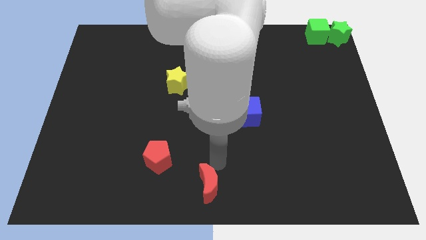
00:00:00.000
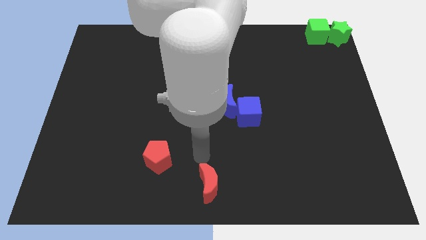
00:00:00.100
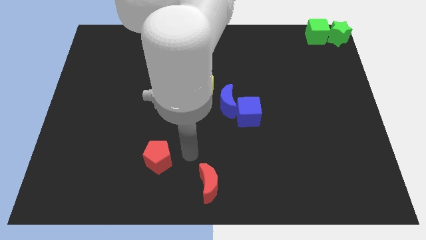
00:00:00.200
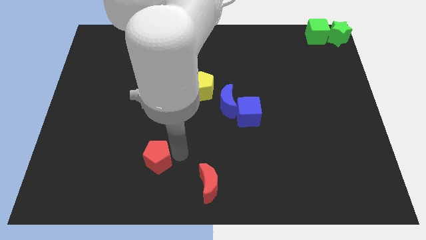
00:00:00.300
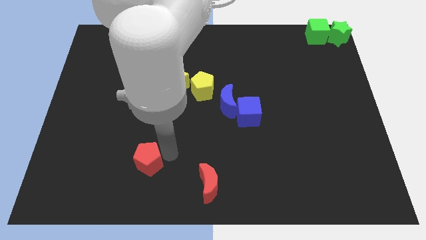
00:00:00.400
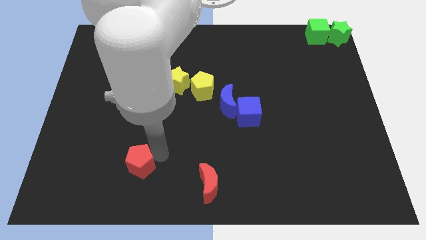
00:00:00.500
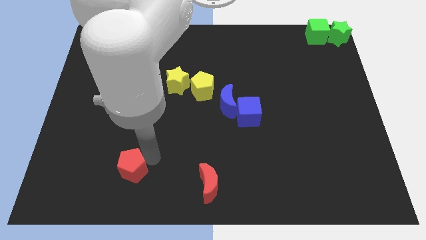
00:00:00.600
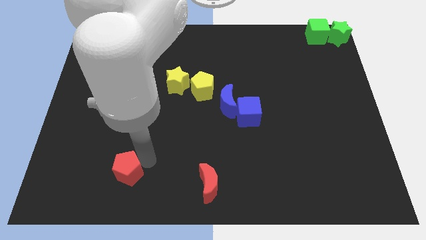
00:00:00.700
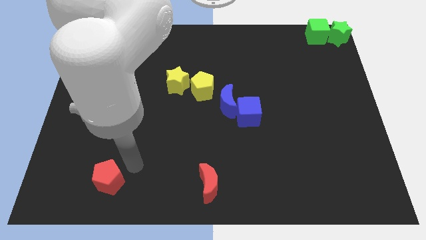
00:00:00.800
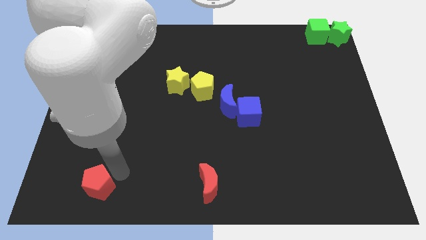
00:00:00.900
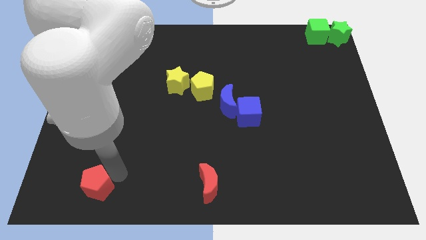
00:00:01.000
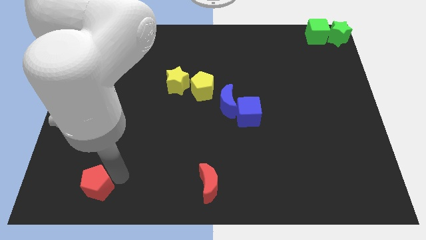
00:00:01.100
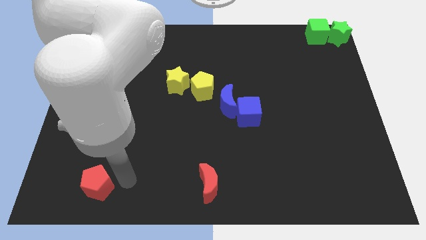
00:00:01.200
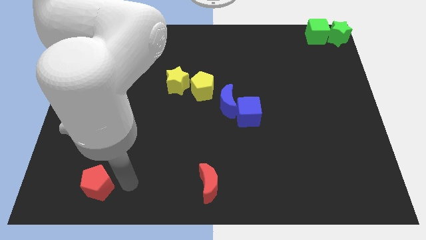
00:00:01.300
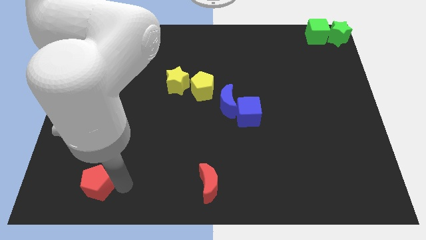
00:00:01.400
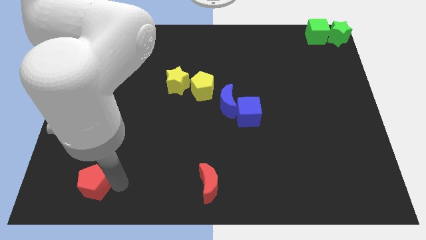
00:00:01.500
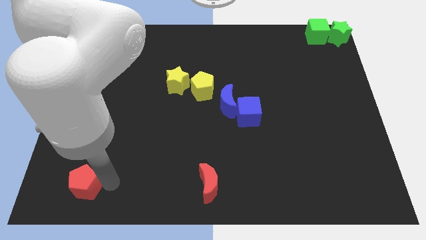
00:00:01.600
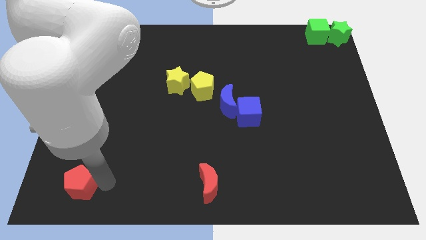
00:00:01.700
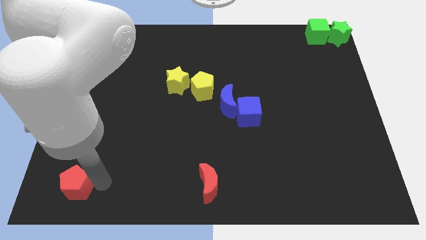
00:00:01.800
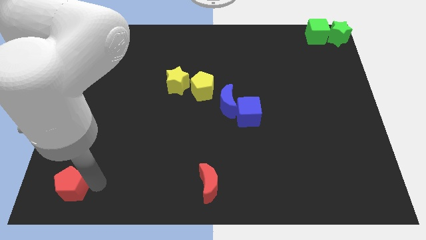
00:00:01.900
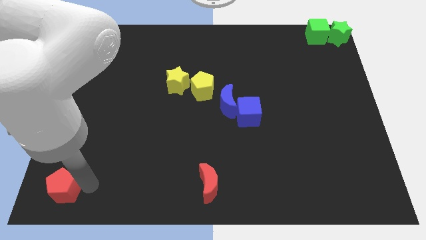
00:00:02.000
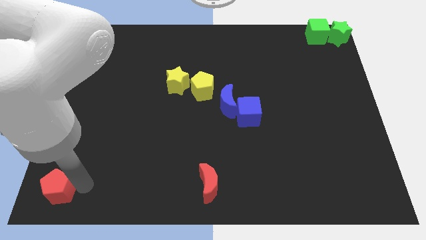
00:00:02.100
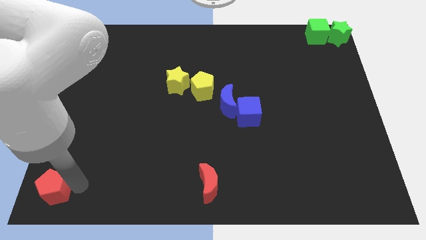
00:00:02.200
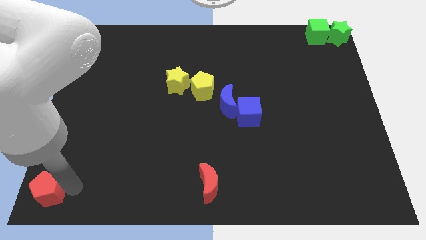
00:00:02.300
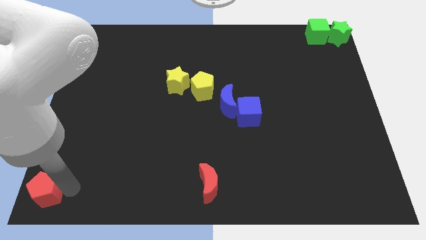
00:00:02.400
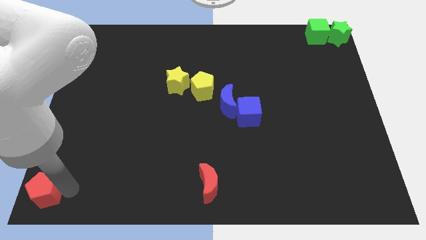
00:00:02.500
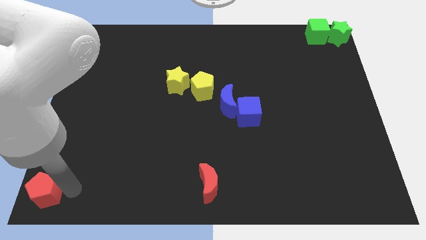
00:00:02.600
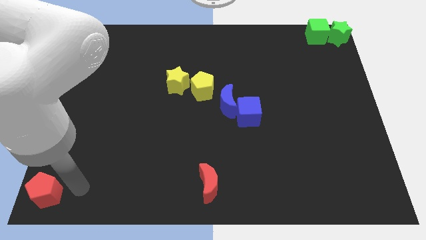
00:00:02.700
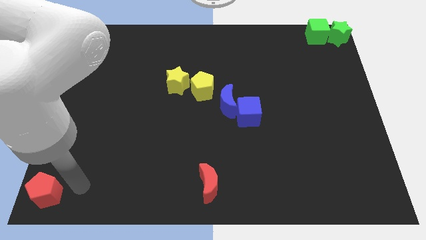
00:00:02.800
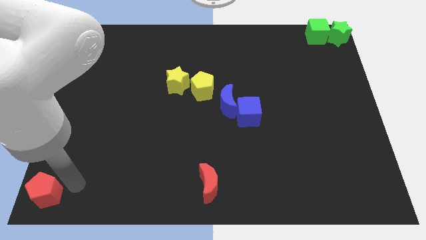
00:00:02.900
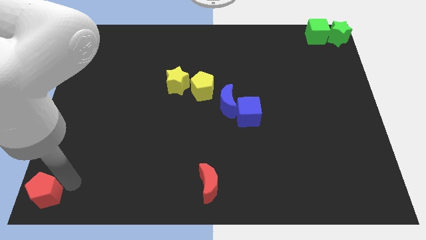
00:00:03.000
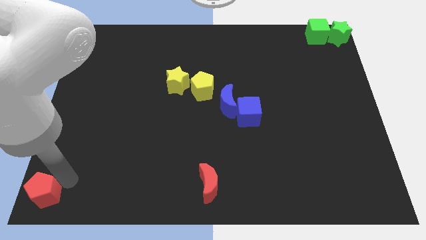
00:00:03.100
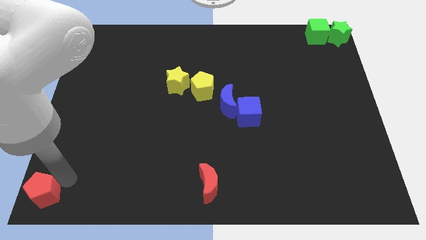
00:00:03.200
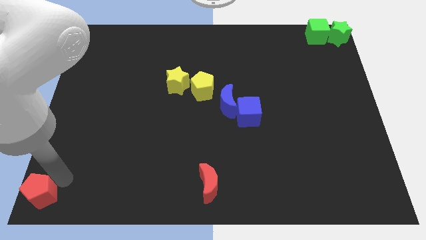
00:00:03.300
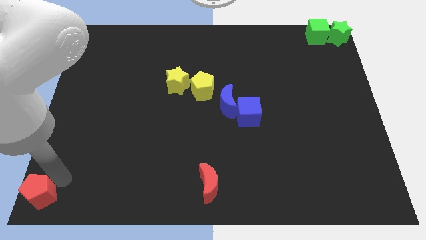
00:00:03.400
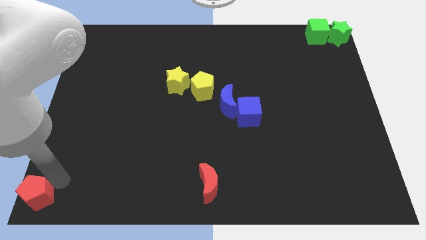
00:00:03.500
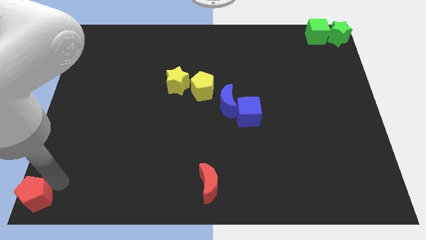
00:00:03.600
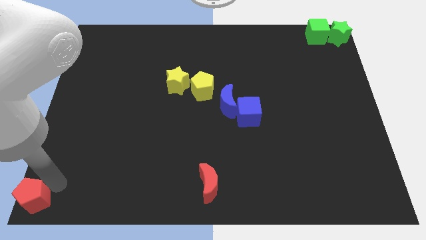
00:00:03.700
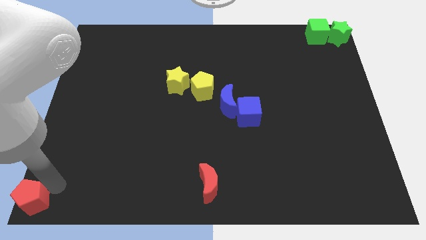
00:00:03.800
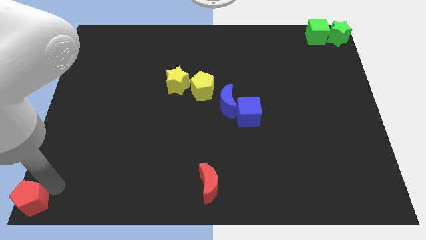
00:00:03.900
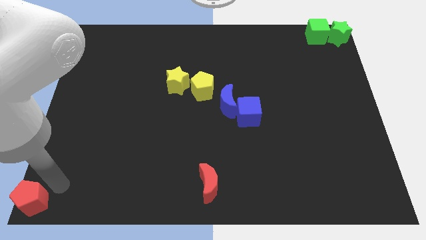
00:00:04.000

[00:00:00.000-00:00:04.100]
put the red pentagon diagonally at the bottom left of the yellow star

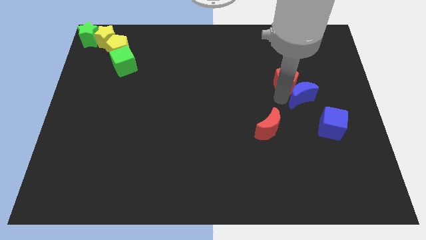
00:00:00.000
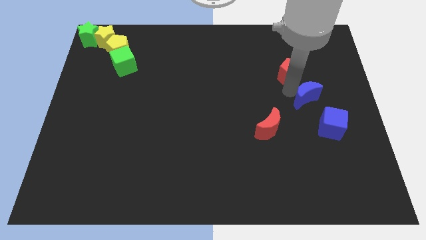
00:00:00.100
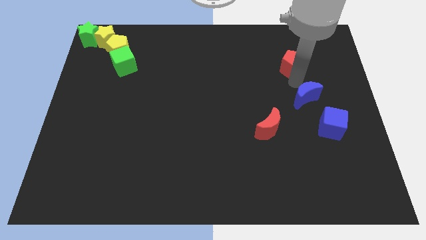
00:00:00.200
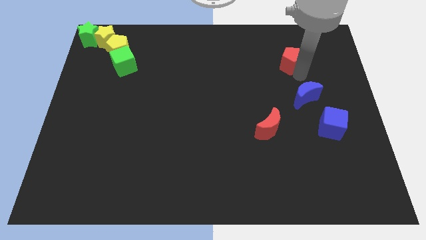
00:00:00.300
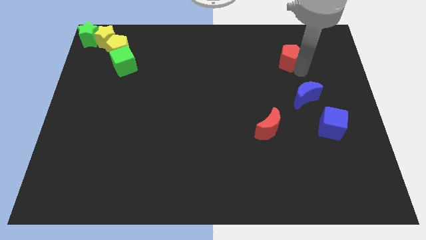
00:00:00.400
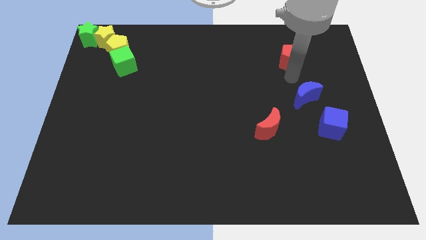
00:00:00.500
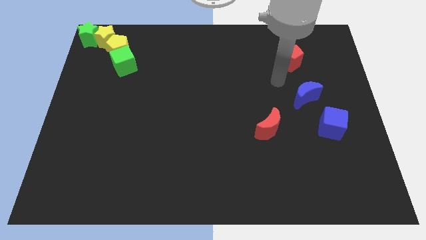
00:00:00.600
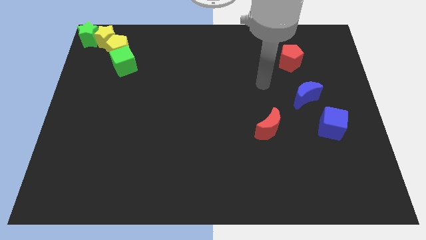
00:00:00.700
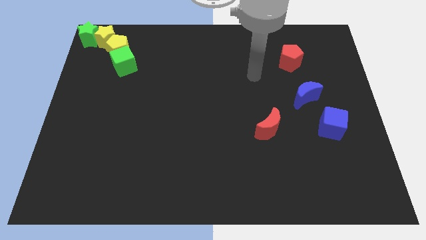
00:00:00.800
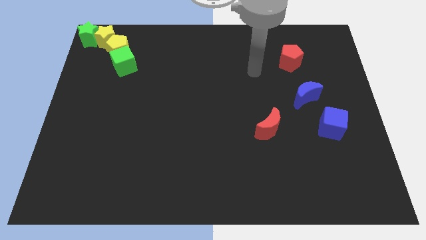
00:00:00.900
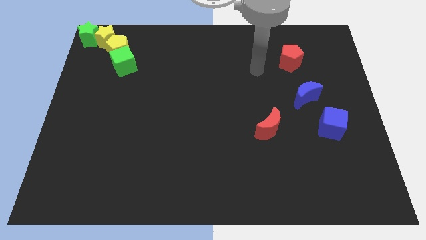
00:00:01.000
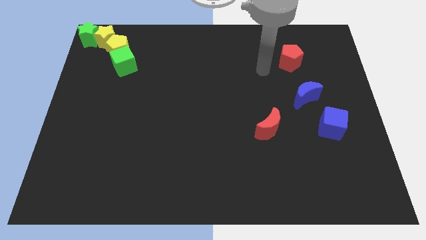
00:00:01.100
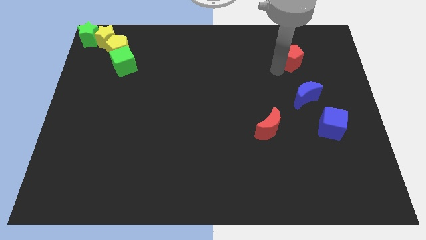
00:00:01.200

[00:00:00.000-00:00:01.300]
place the red pentagon to the top of the blue crescent

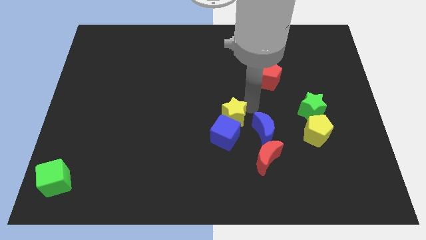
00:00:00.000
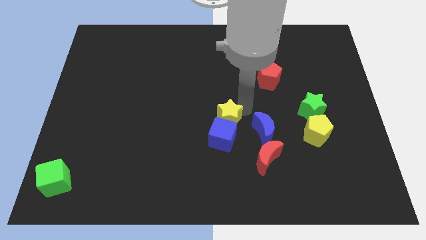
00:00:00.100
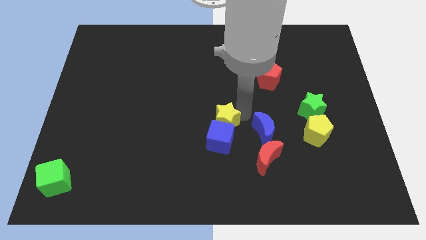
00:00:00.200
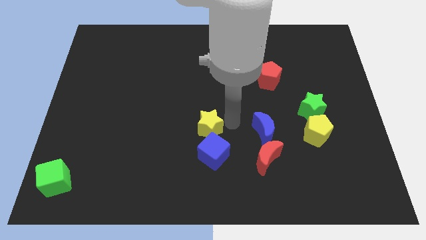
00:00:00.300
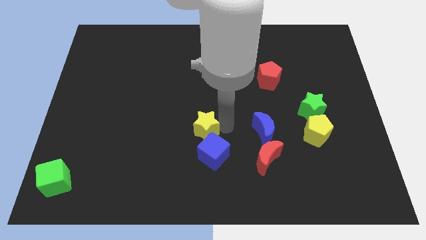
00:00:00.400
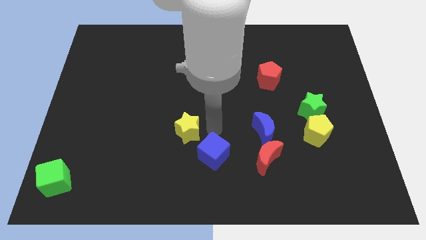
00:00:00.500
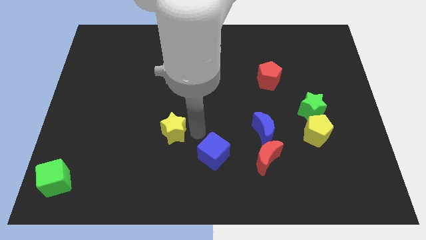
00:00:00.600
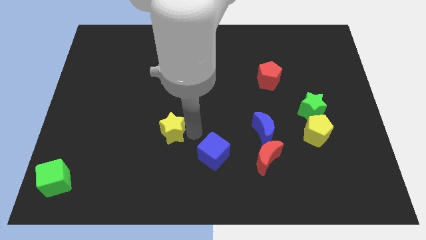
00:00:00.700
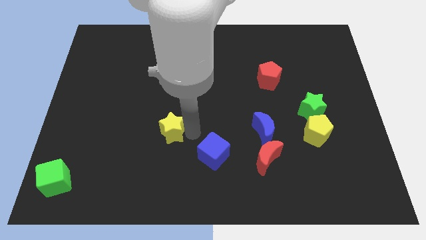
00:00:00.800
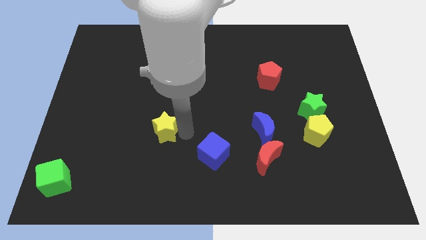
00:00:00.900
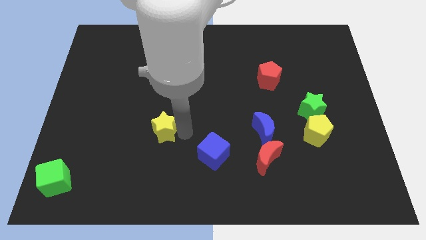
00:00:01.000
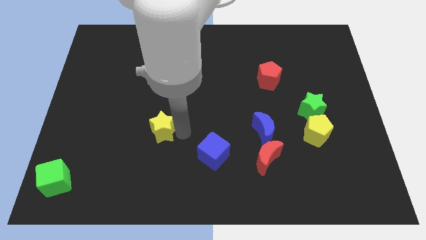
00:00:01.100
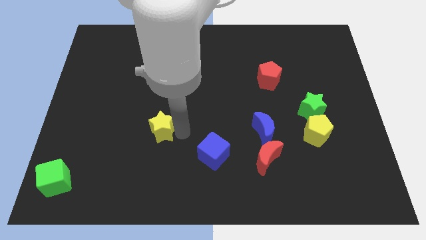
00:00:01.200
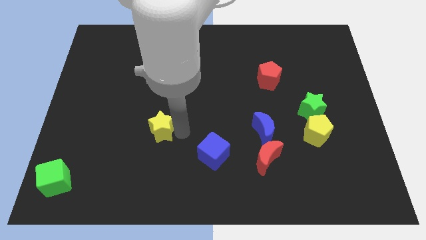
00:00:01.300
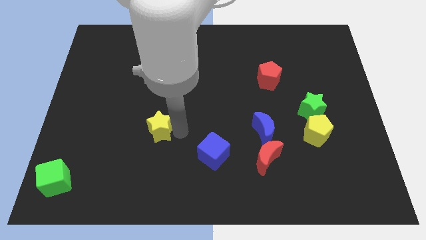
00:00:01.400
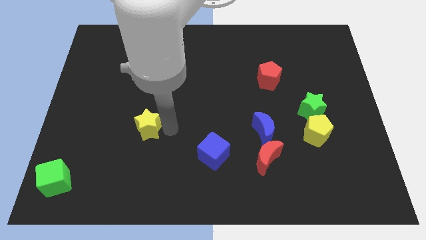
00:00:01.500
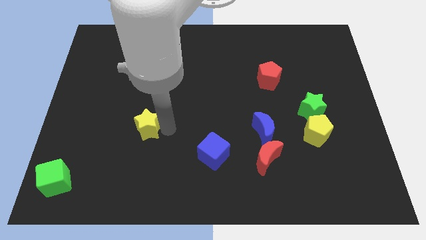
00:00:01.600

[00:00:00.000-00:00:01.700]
separate yellow star from blue cube

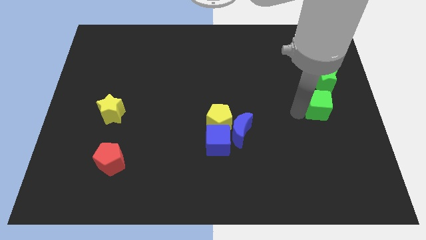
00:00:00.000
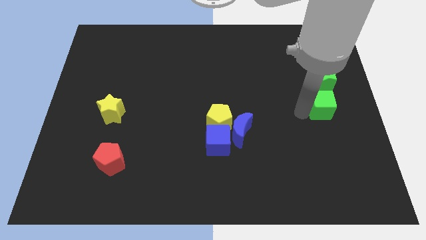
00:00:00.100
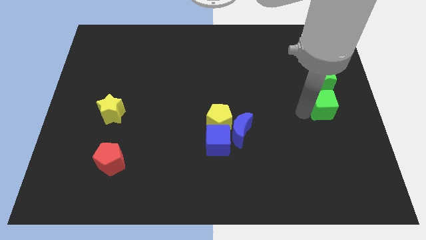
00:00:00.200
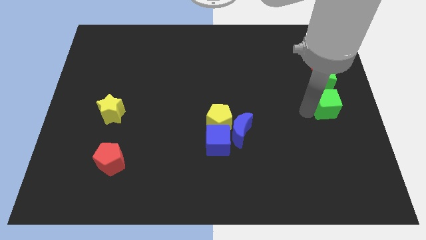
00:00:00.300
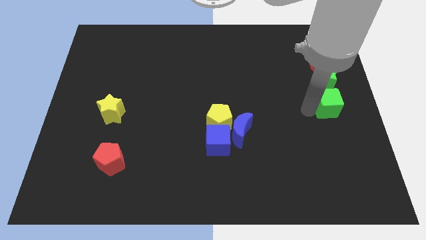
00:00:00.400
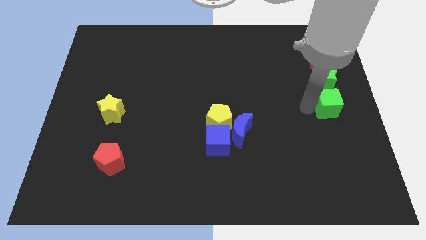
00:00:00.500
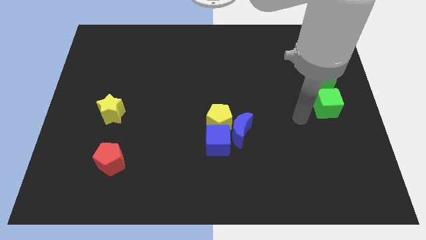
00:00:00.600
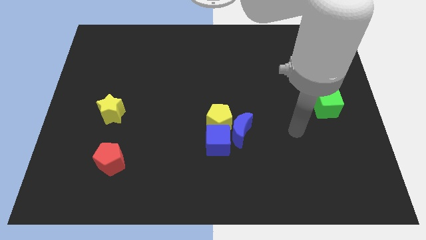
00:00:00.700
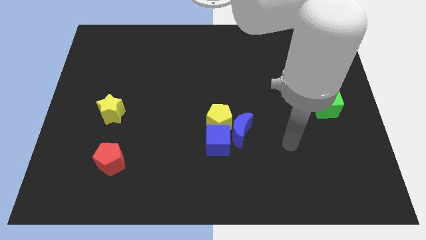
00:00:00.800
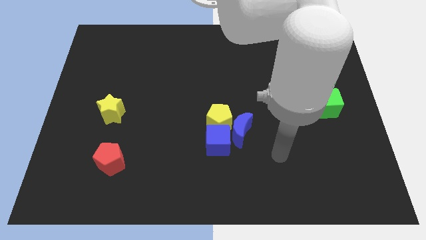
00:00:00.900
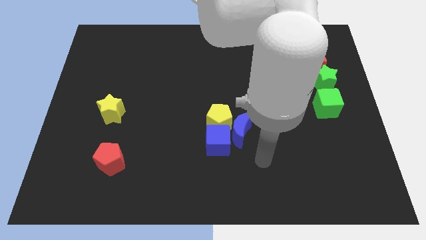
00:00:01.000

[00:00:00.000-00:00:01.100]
move the green cube below green star

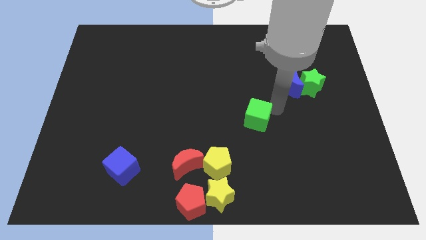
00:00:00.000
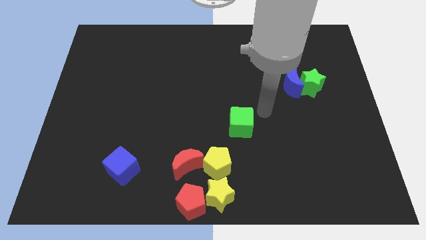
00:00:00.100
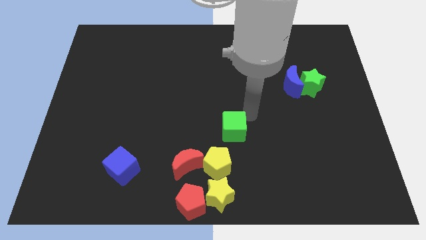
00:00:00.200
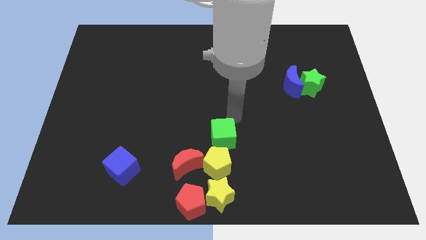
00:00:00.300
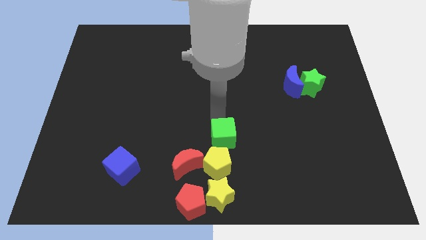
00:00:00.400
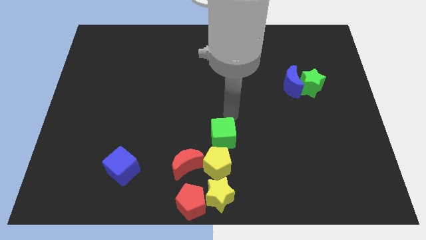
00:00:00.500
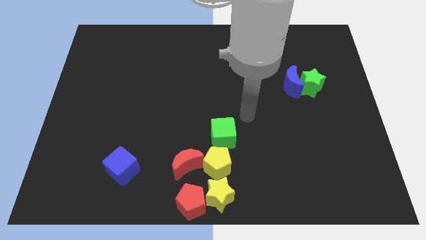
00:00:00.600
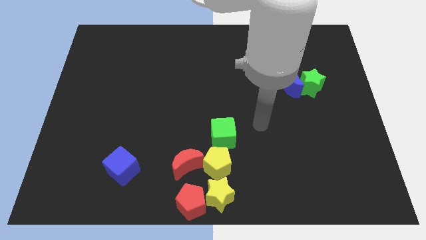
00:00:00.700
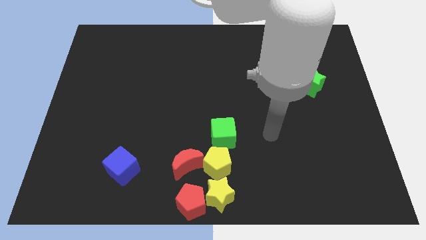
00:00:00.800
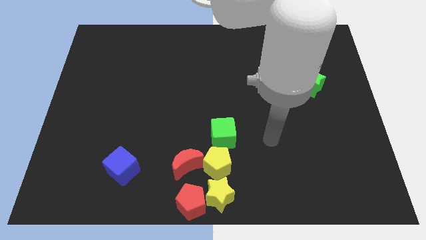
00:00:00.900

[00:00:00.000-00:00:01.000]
place the green cube diagonally top right to yellow pentagon
